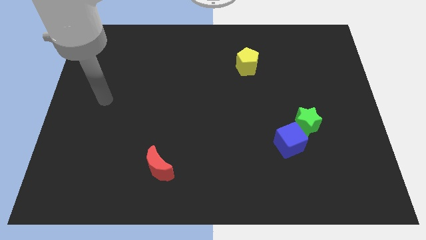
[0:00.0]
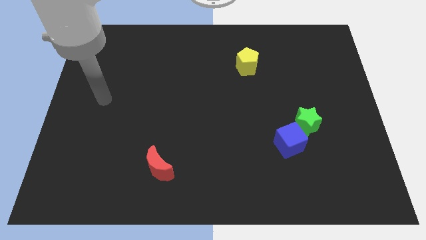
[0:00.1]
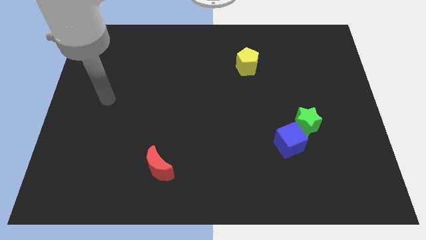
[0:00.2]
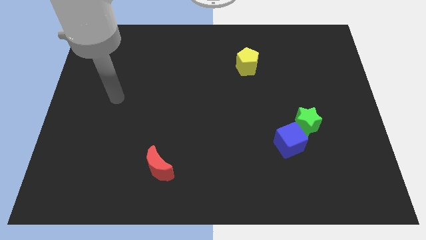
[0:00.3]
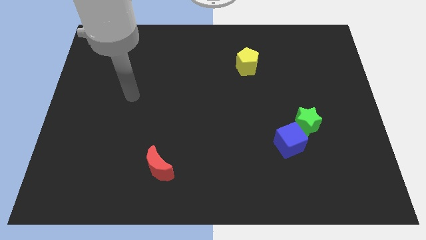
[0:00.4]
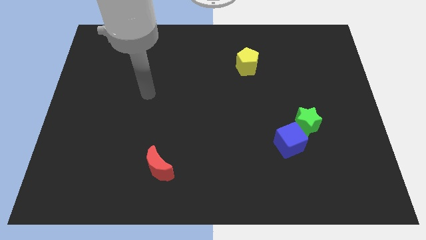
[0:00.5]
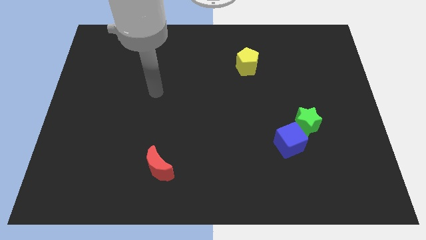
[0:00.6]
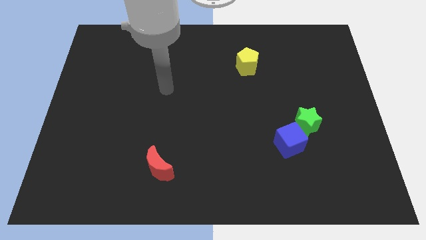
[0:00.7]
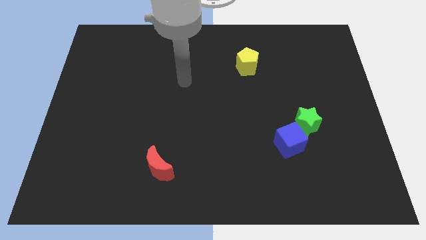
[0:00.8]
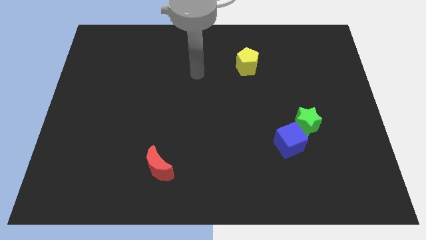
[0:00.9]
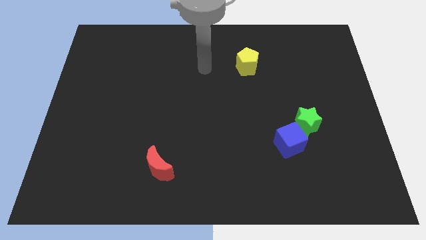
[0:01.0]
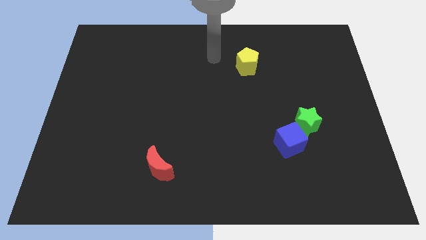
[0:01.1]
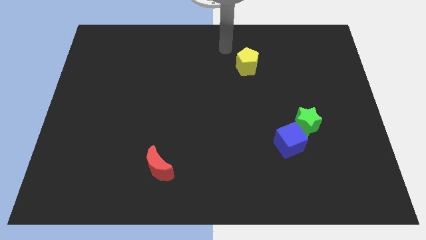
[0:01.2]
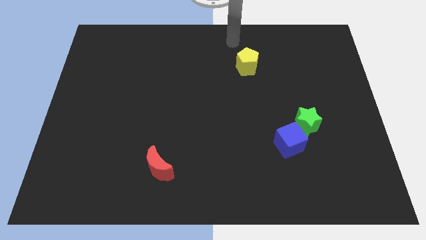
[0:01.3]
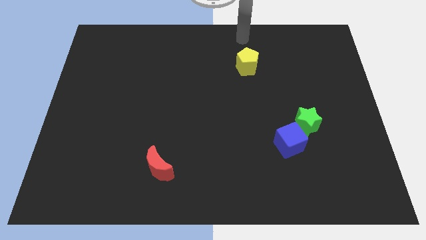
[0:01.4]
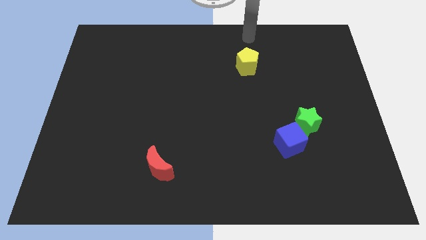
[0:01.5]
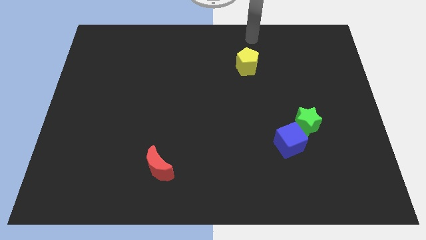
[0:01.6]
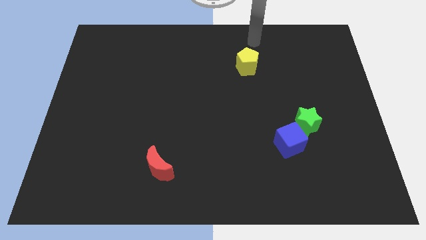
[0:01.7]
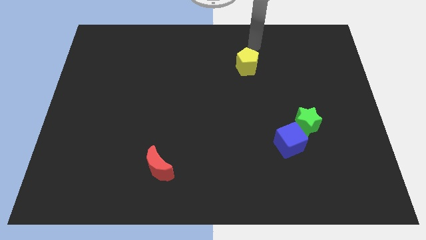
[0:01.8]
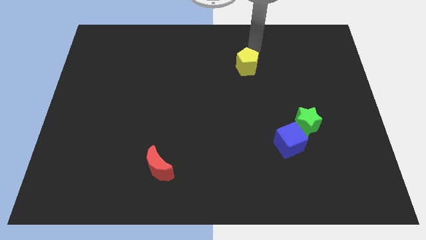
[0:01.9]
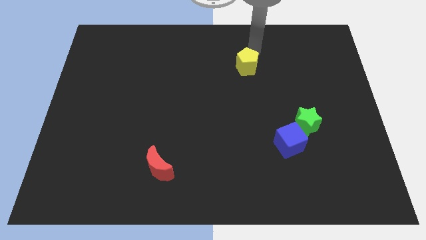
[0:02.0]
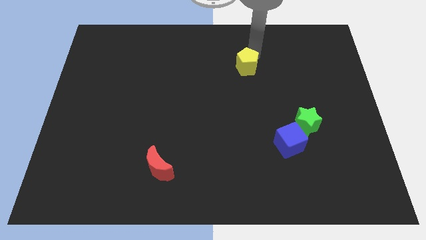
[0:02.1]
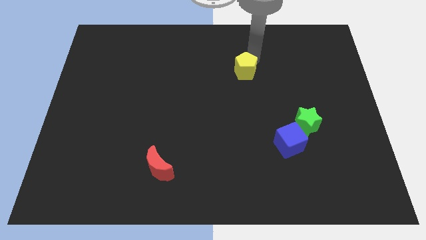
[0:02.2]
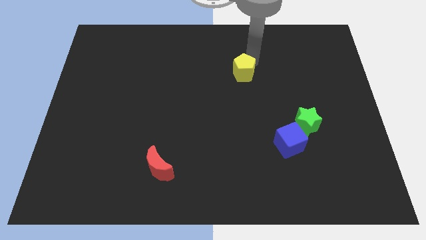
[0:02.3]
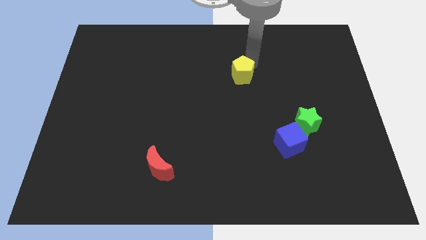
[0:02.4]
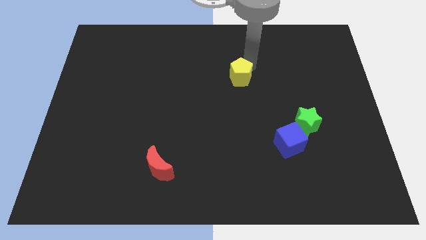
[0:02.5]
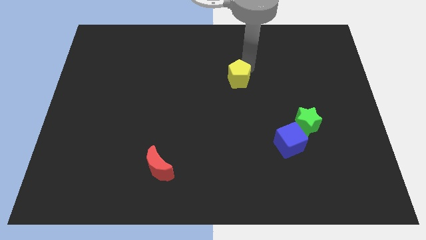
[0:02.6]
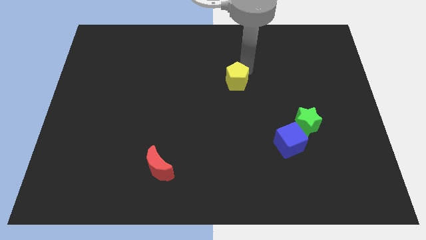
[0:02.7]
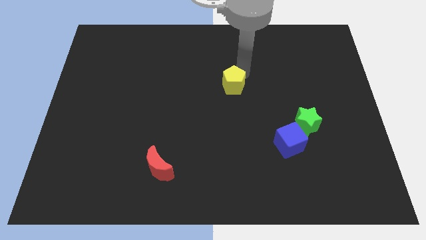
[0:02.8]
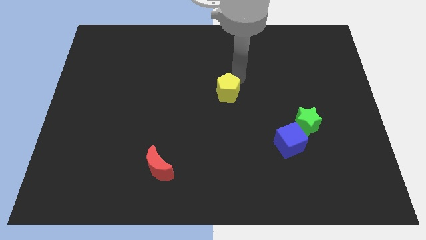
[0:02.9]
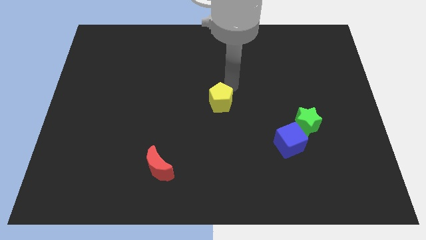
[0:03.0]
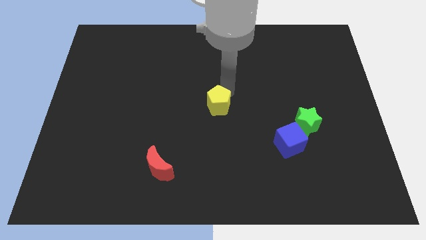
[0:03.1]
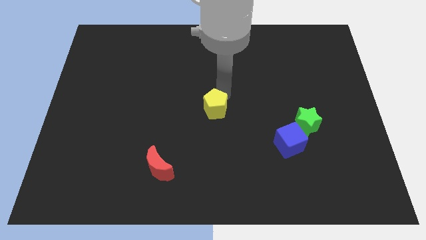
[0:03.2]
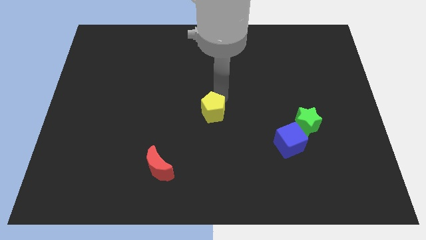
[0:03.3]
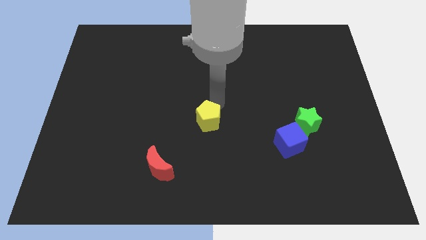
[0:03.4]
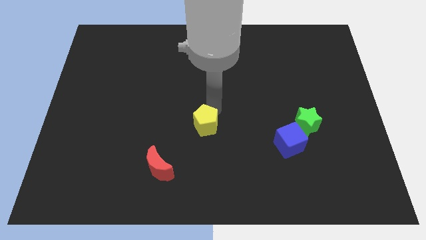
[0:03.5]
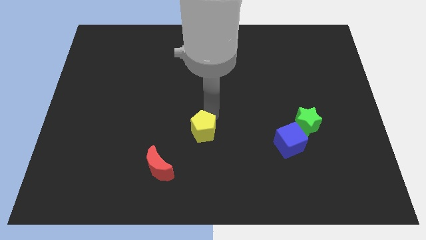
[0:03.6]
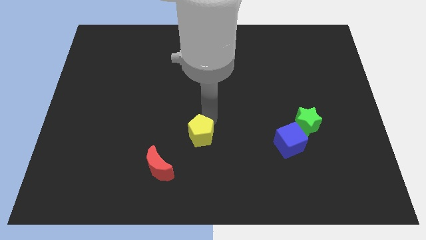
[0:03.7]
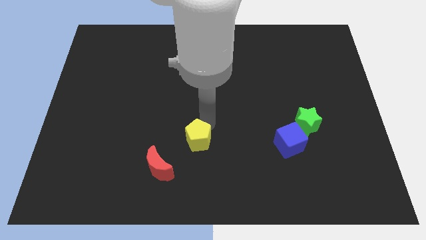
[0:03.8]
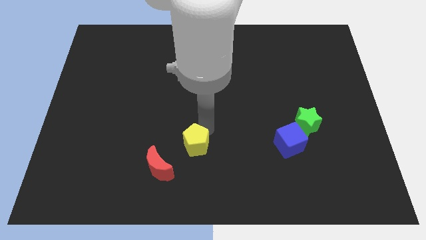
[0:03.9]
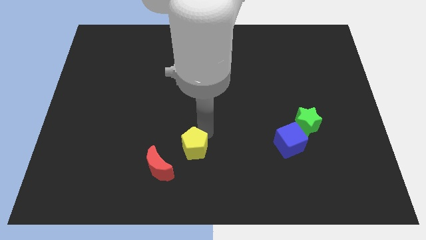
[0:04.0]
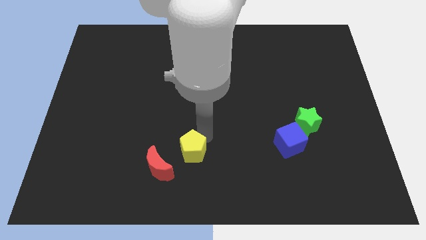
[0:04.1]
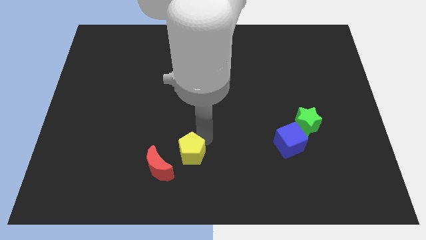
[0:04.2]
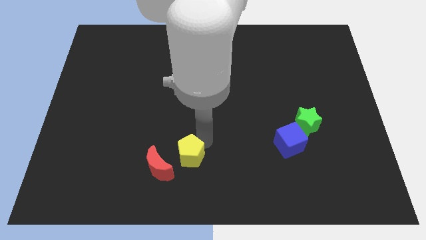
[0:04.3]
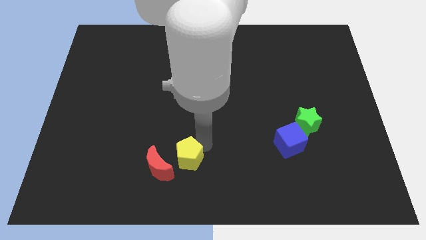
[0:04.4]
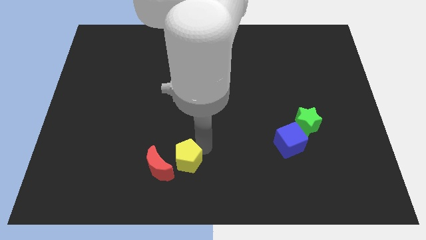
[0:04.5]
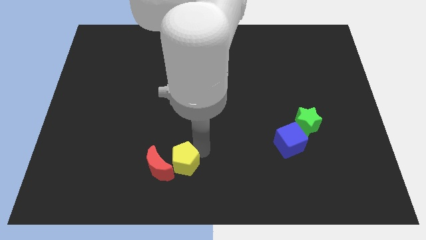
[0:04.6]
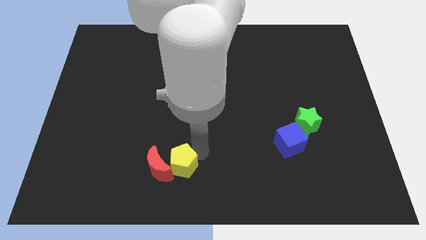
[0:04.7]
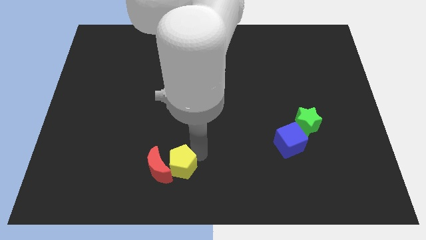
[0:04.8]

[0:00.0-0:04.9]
put the yellow pentagon towards the red block

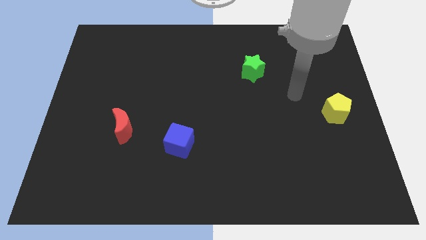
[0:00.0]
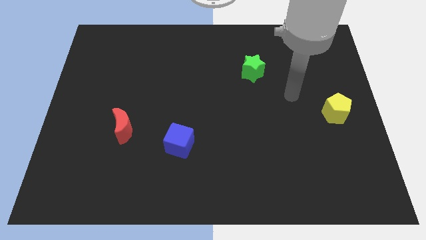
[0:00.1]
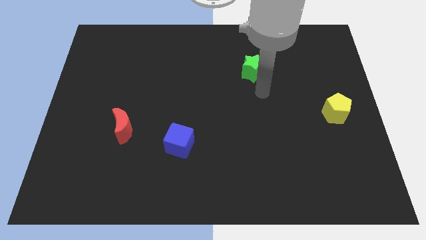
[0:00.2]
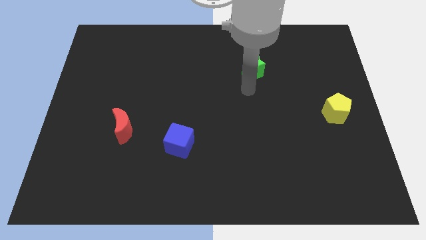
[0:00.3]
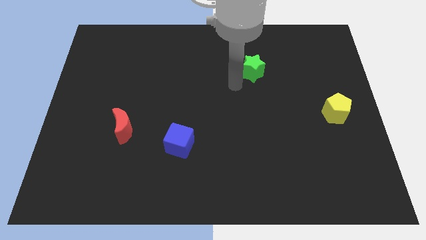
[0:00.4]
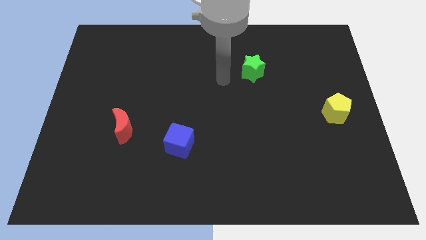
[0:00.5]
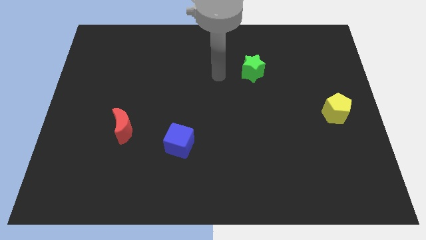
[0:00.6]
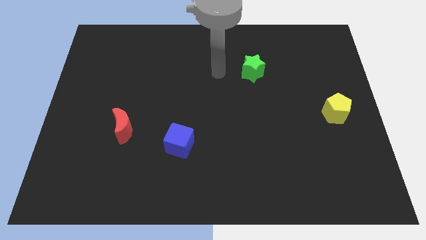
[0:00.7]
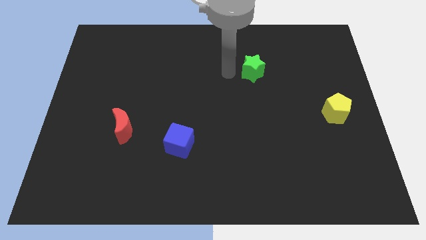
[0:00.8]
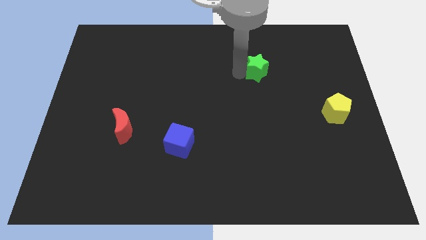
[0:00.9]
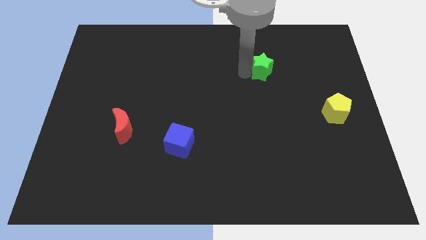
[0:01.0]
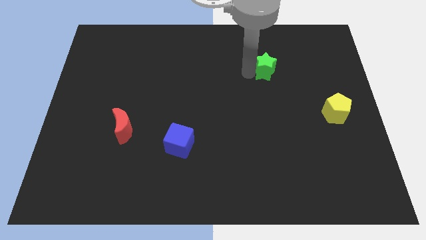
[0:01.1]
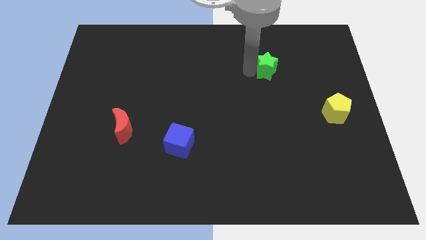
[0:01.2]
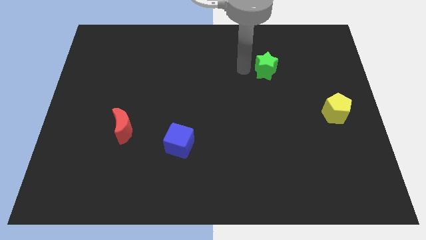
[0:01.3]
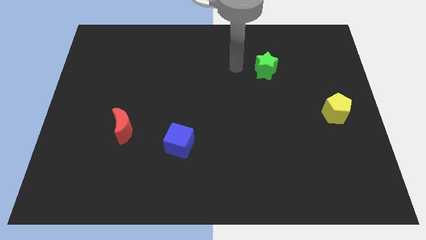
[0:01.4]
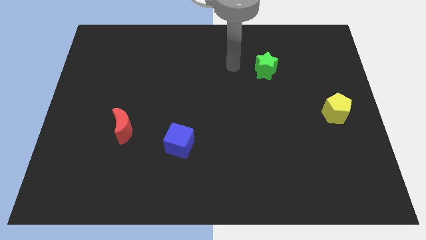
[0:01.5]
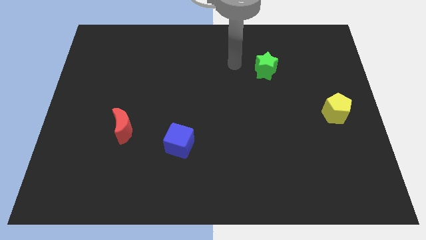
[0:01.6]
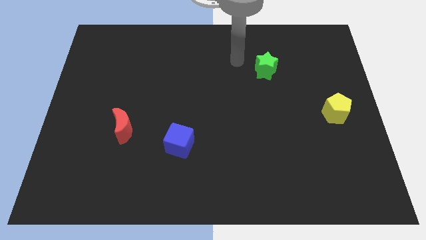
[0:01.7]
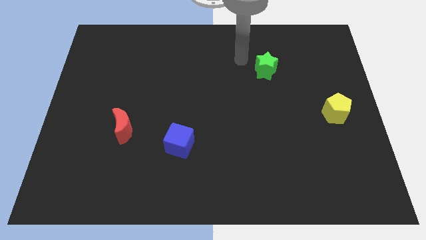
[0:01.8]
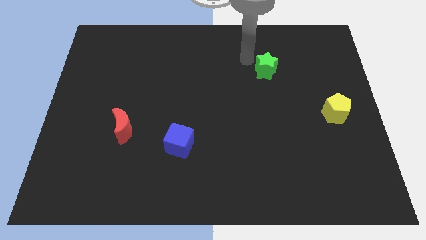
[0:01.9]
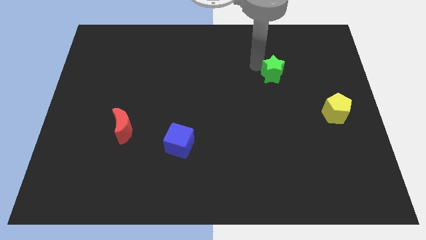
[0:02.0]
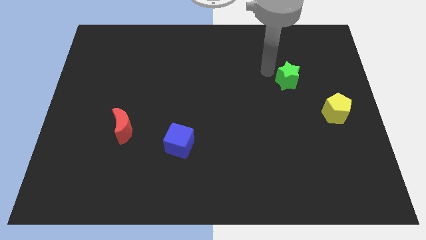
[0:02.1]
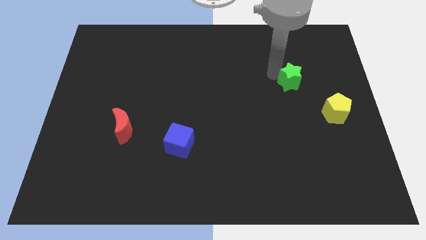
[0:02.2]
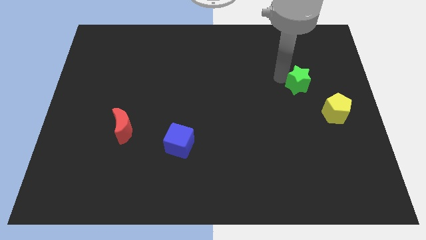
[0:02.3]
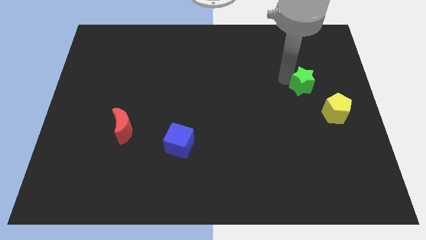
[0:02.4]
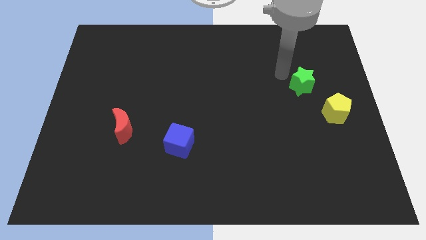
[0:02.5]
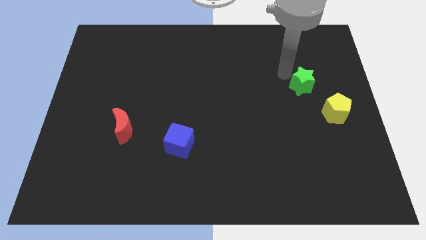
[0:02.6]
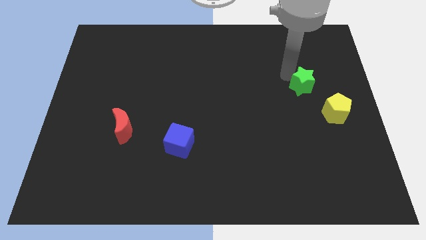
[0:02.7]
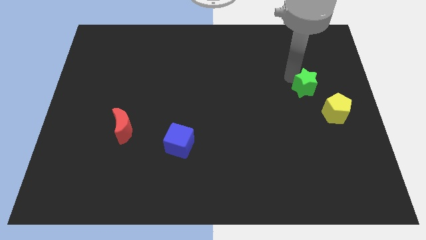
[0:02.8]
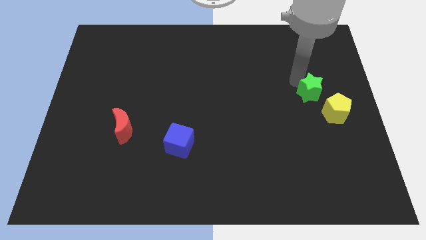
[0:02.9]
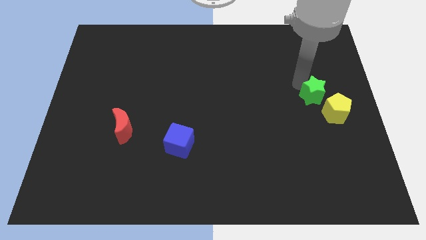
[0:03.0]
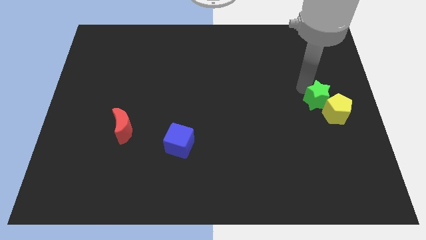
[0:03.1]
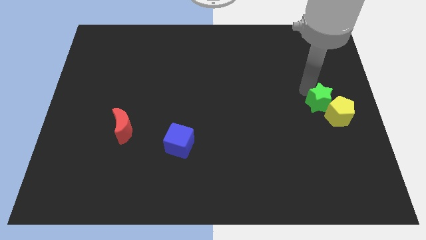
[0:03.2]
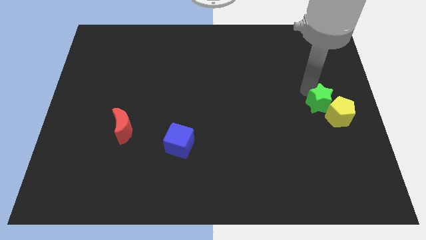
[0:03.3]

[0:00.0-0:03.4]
put the star to the pentagon

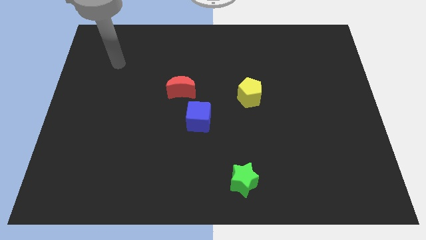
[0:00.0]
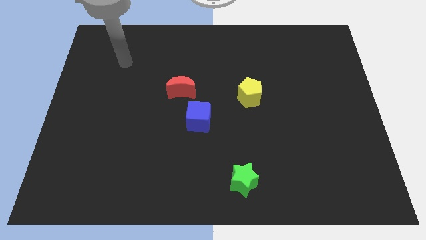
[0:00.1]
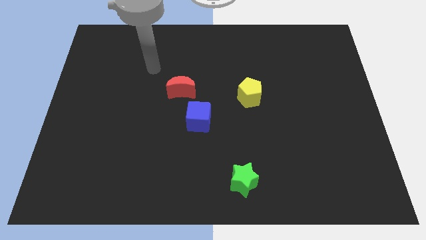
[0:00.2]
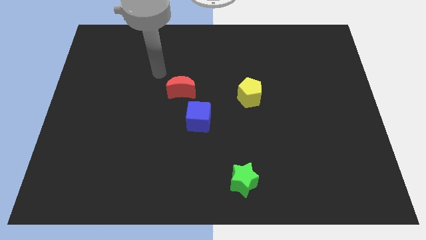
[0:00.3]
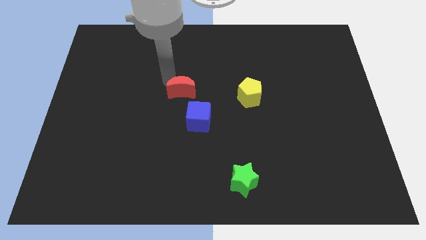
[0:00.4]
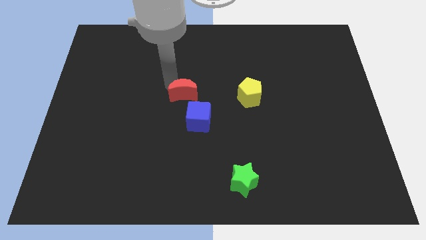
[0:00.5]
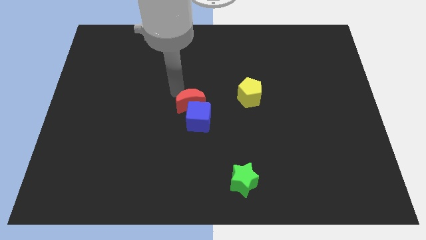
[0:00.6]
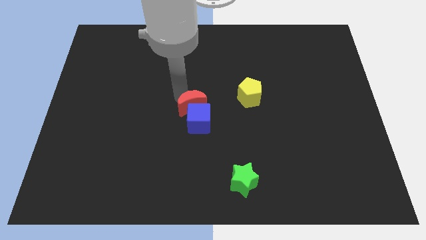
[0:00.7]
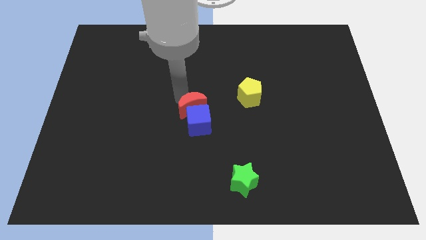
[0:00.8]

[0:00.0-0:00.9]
put the moon towards the cube
